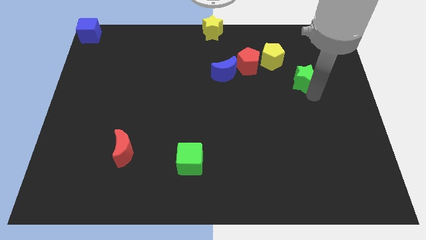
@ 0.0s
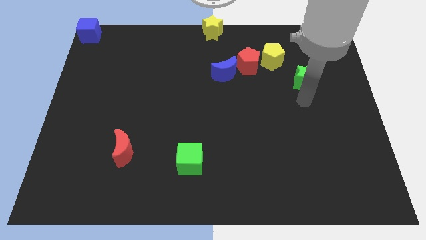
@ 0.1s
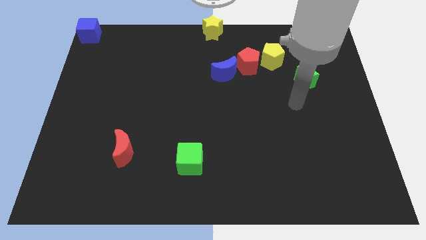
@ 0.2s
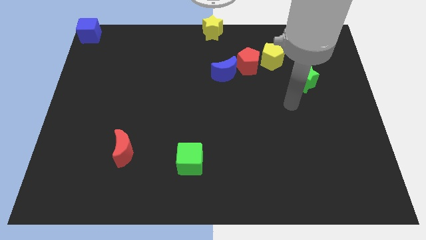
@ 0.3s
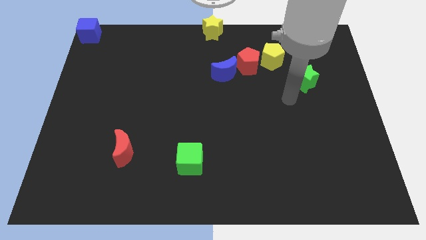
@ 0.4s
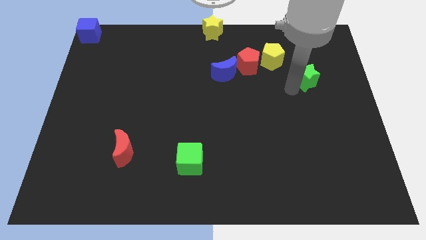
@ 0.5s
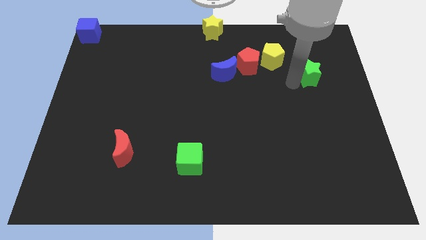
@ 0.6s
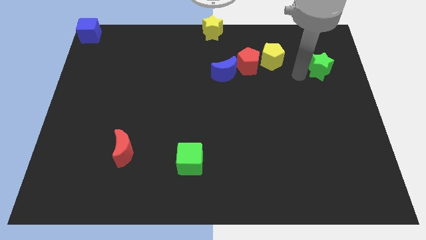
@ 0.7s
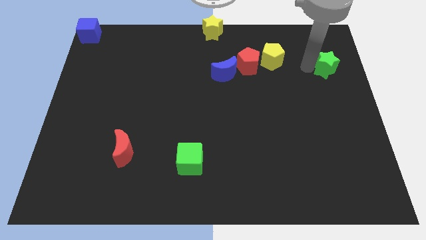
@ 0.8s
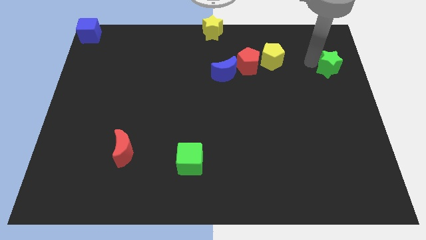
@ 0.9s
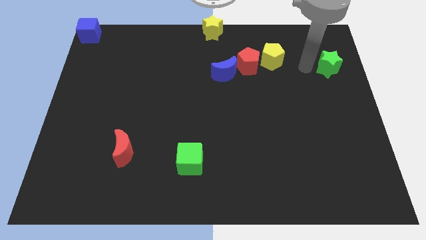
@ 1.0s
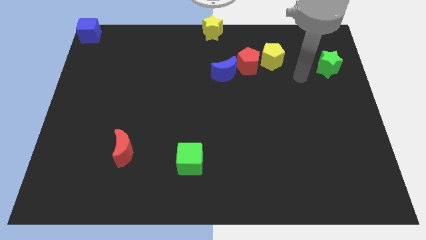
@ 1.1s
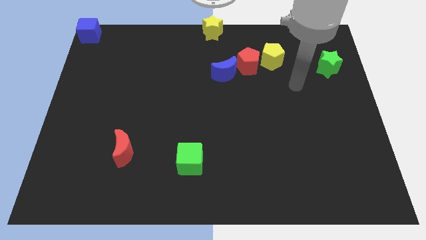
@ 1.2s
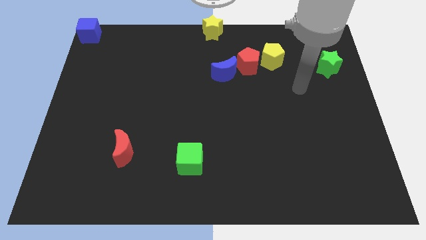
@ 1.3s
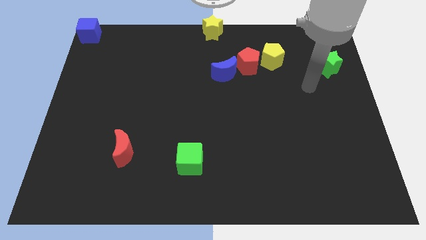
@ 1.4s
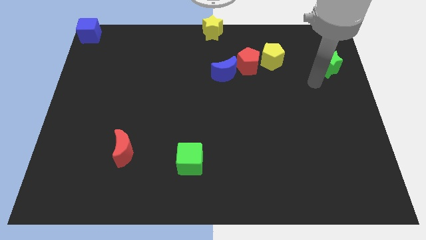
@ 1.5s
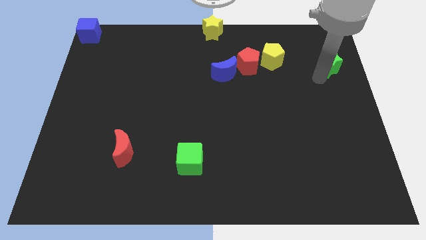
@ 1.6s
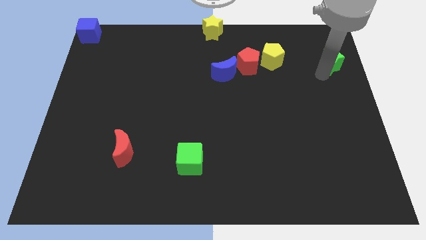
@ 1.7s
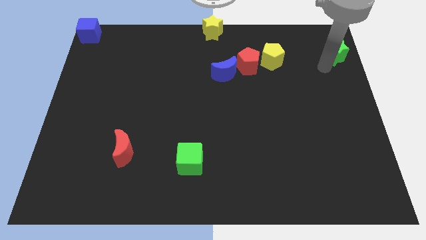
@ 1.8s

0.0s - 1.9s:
move the green star to the right of the yellow pentagon

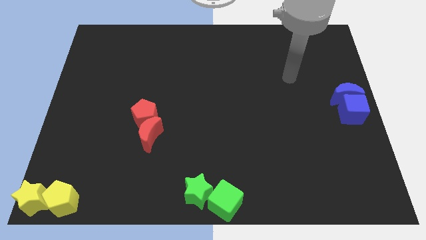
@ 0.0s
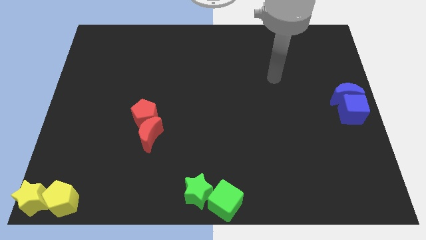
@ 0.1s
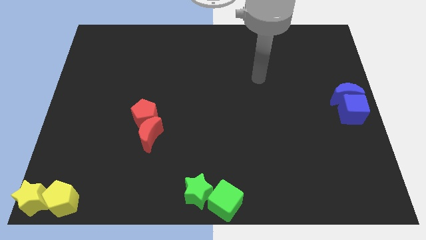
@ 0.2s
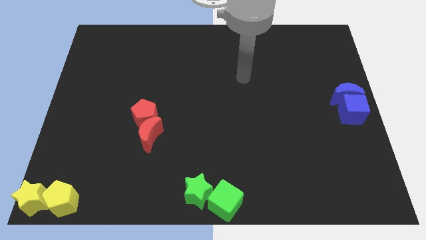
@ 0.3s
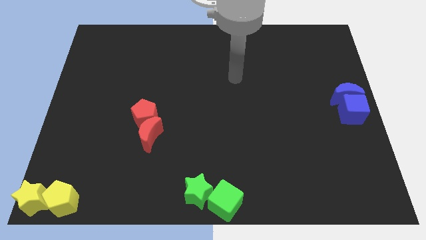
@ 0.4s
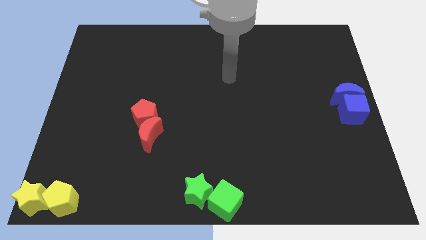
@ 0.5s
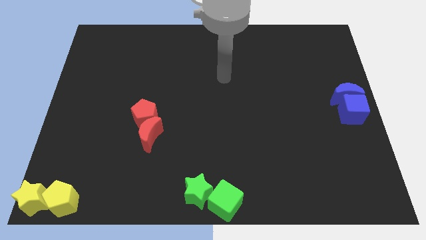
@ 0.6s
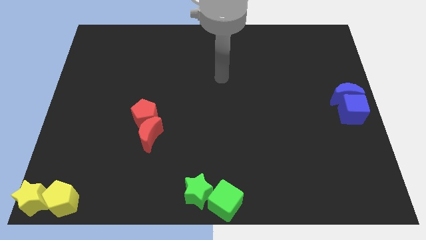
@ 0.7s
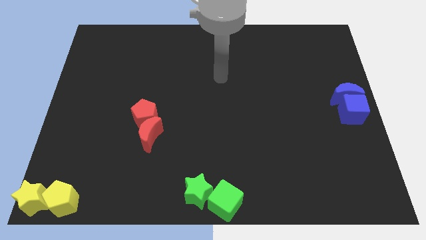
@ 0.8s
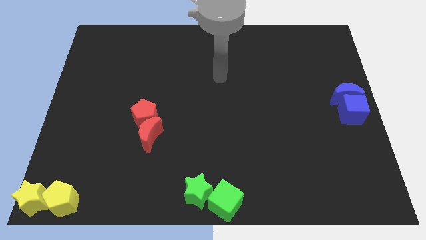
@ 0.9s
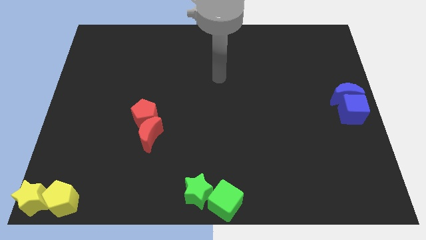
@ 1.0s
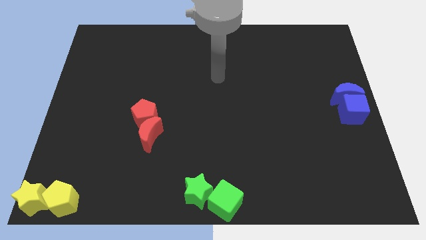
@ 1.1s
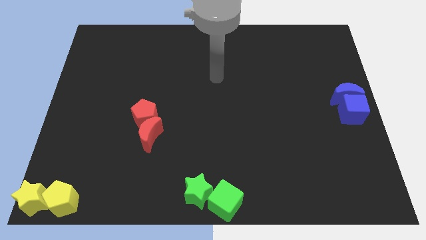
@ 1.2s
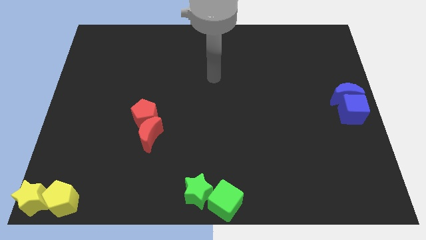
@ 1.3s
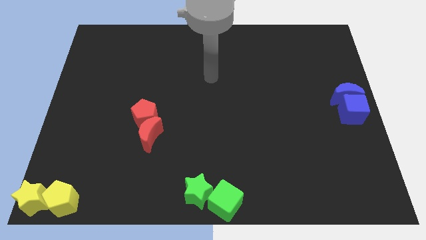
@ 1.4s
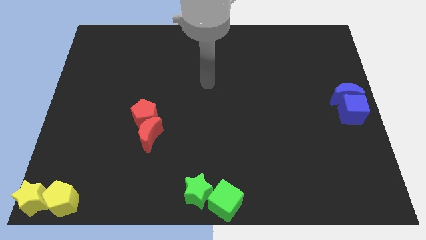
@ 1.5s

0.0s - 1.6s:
point arm towards the center of the board

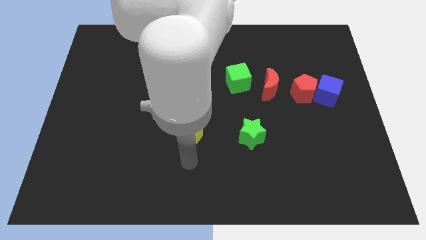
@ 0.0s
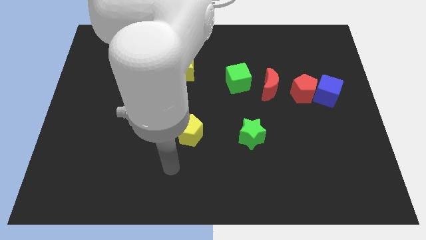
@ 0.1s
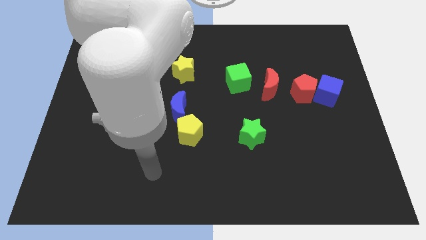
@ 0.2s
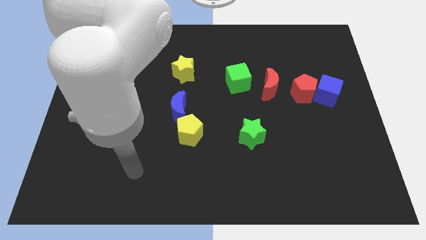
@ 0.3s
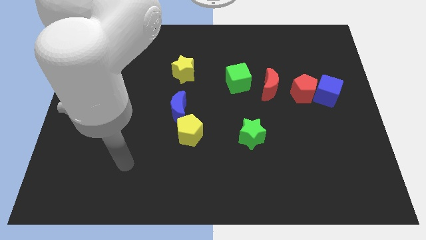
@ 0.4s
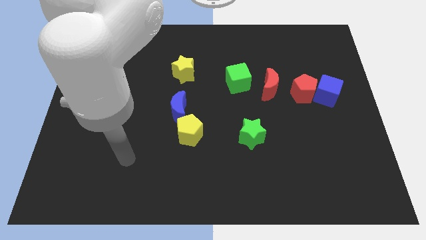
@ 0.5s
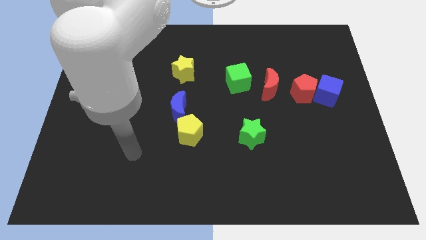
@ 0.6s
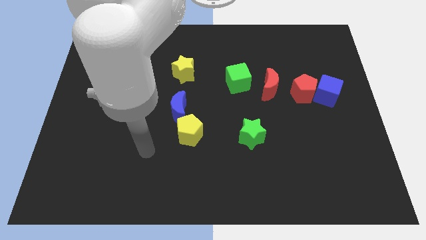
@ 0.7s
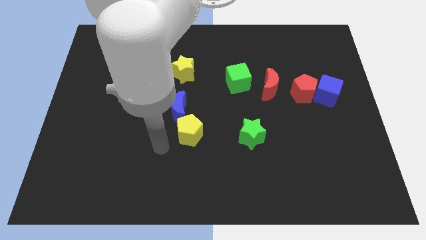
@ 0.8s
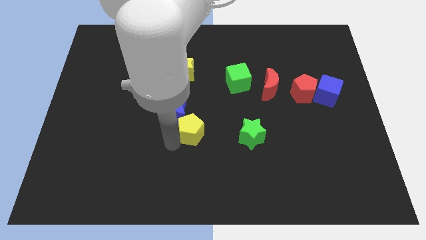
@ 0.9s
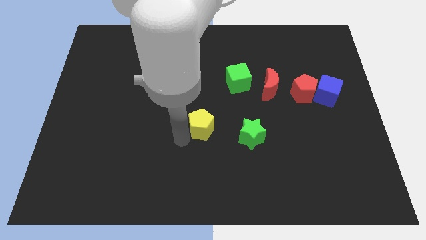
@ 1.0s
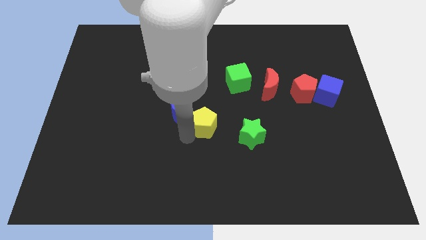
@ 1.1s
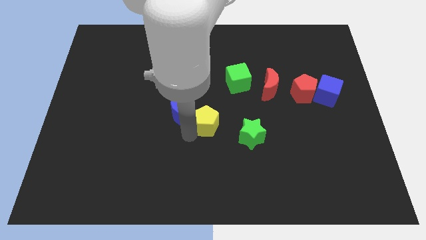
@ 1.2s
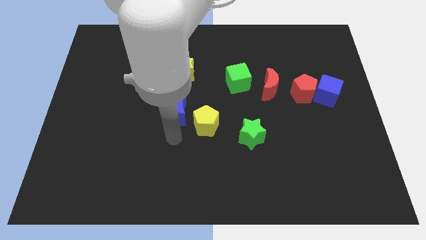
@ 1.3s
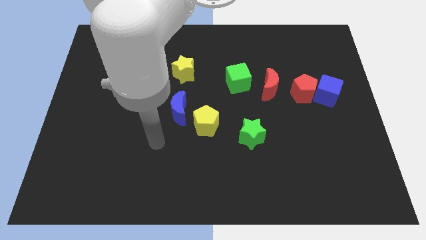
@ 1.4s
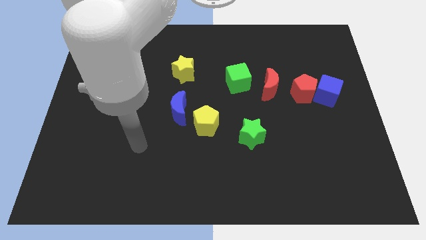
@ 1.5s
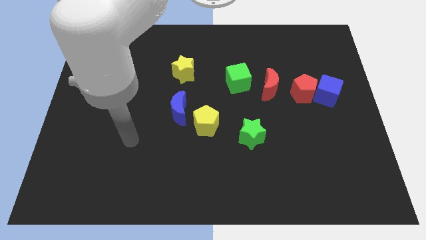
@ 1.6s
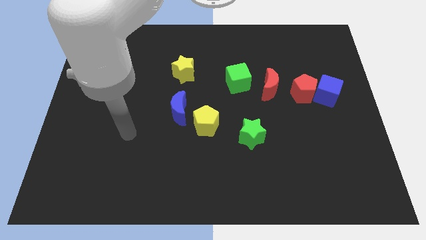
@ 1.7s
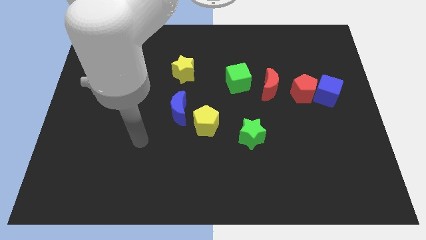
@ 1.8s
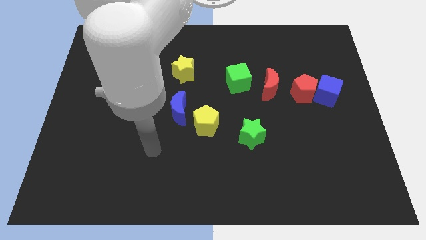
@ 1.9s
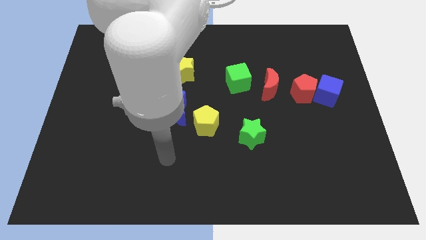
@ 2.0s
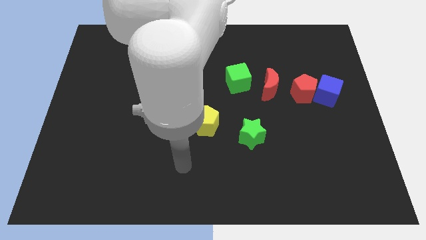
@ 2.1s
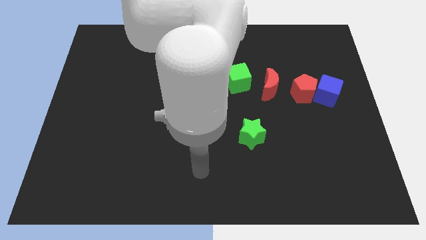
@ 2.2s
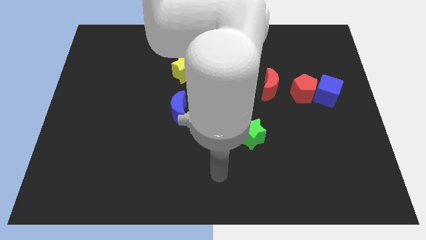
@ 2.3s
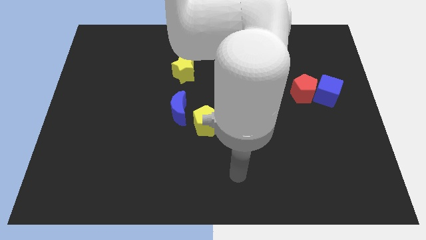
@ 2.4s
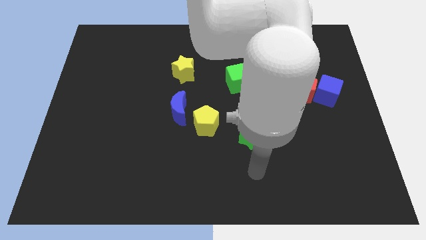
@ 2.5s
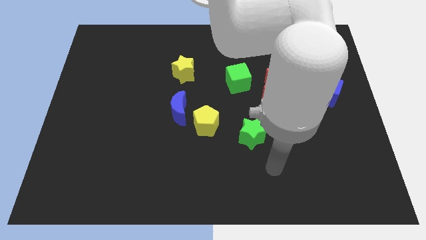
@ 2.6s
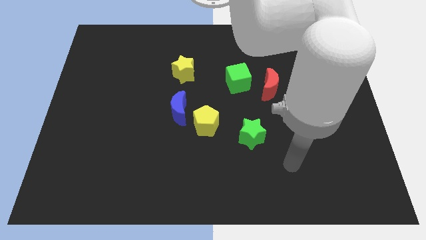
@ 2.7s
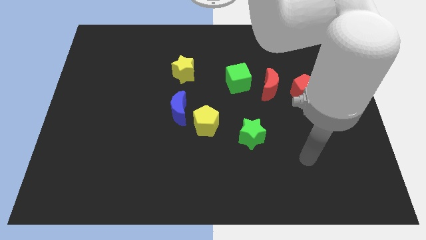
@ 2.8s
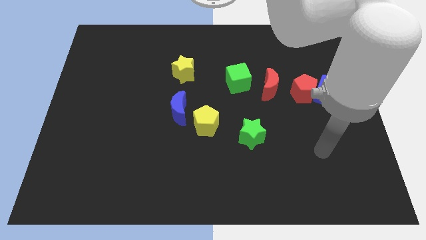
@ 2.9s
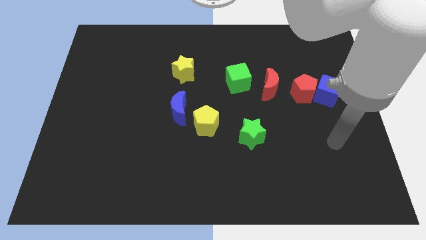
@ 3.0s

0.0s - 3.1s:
move the yellow pentagon in between the blue crescent and green star

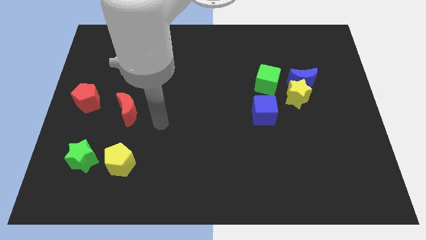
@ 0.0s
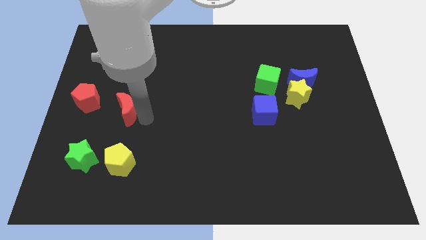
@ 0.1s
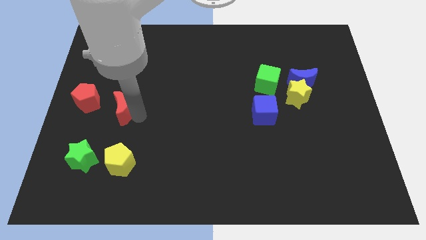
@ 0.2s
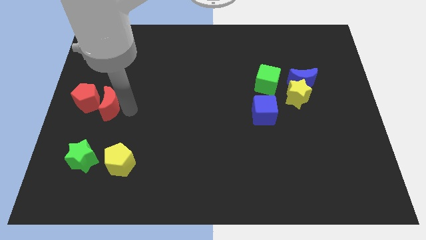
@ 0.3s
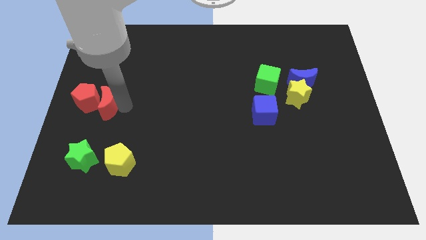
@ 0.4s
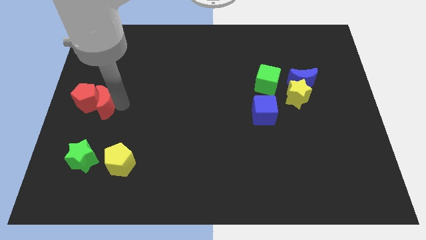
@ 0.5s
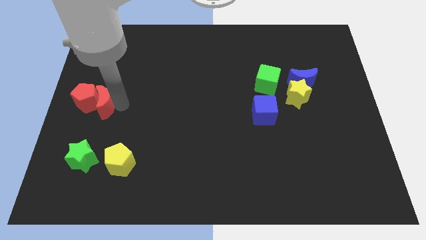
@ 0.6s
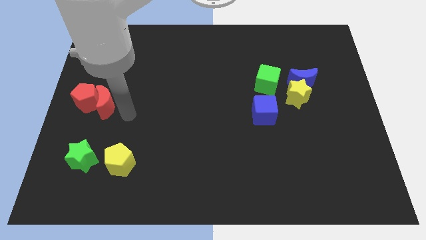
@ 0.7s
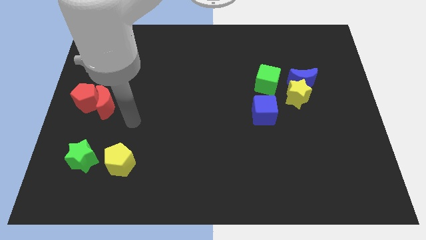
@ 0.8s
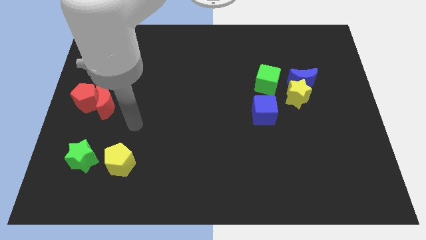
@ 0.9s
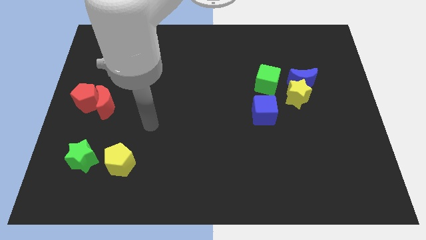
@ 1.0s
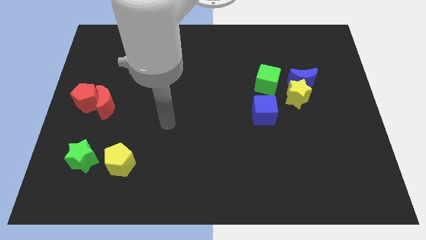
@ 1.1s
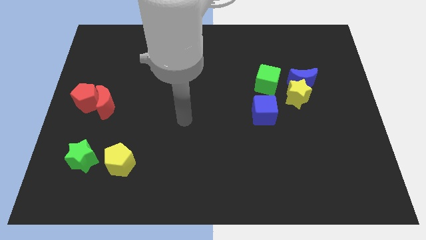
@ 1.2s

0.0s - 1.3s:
move the red moon to the right of the red pentagon

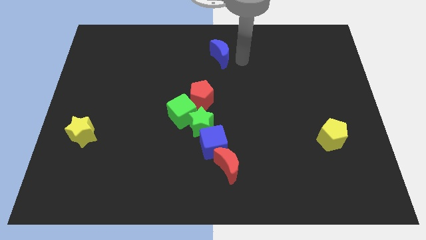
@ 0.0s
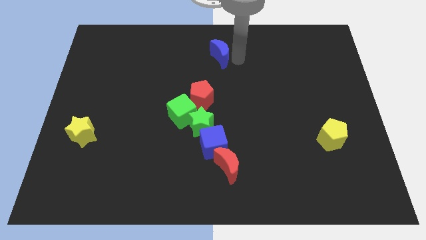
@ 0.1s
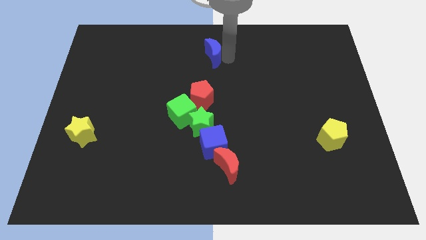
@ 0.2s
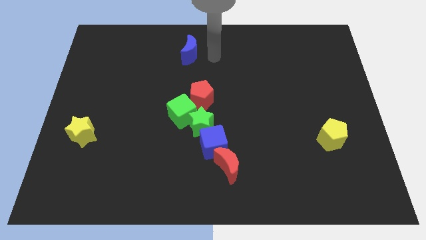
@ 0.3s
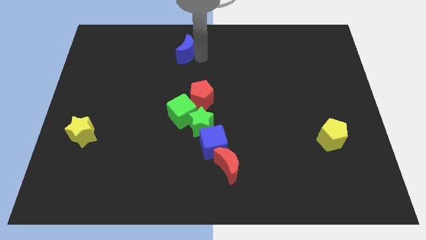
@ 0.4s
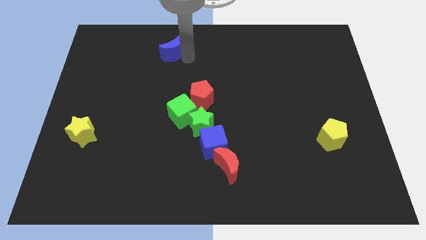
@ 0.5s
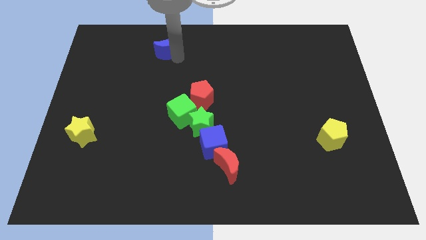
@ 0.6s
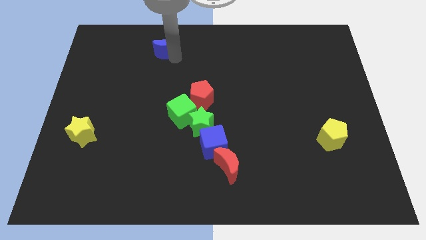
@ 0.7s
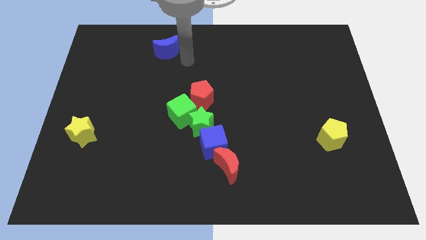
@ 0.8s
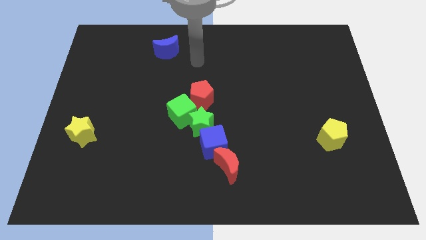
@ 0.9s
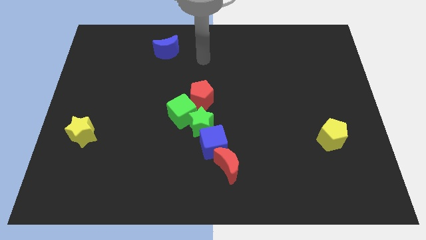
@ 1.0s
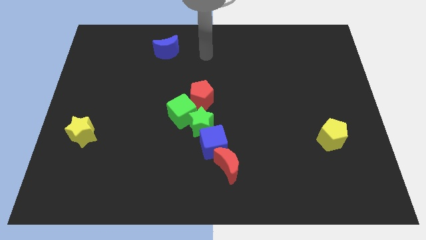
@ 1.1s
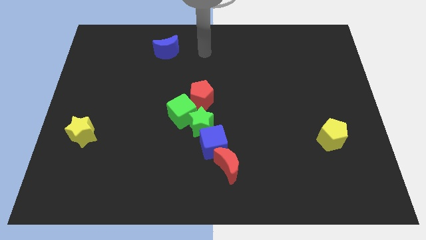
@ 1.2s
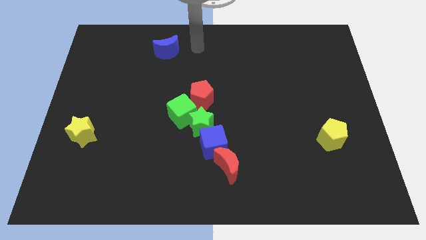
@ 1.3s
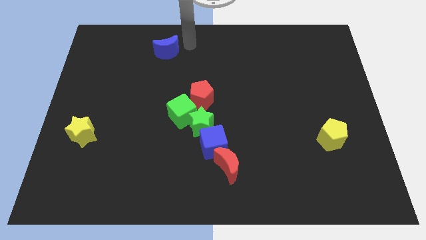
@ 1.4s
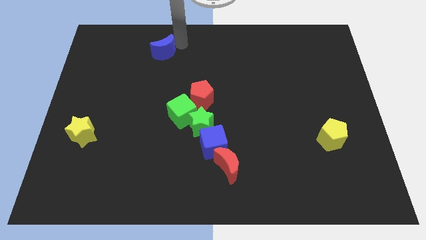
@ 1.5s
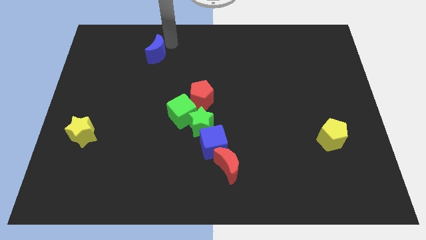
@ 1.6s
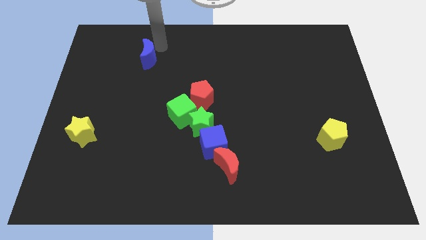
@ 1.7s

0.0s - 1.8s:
place the blue moon above the green cube
